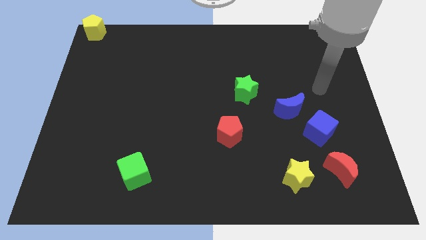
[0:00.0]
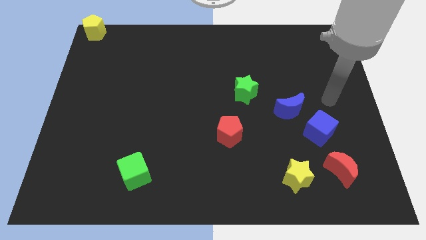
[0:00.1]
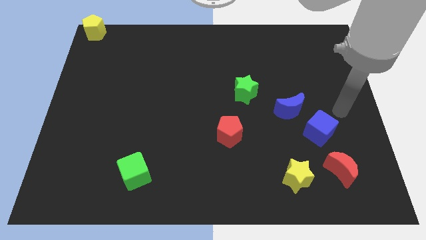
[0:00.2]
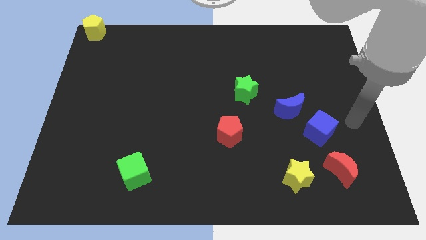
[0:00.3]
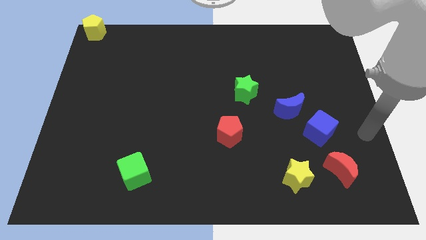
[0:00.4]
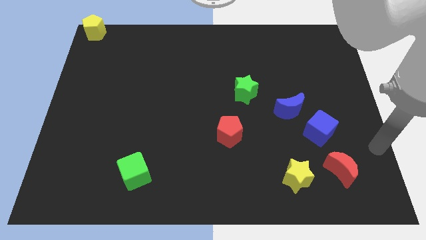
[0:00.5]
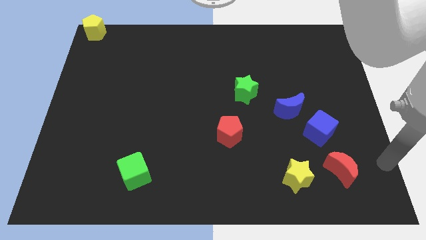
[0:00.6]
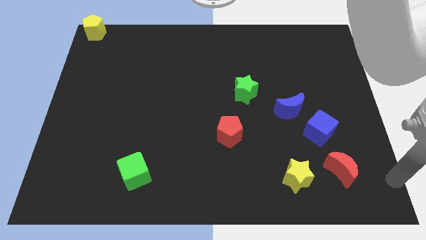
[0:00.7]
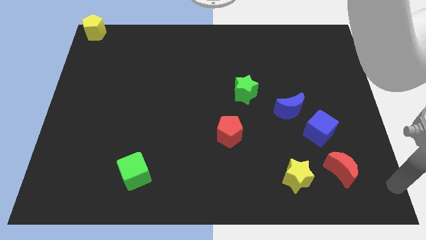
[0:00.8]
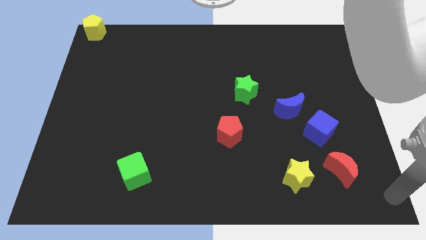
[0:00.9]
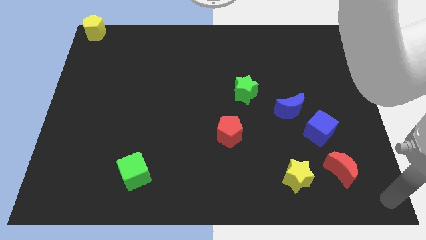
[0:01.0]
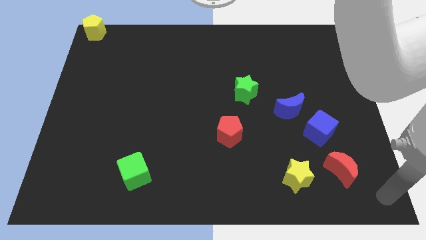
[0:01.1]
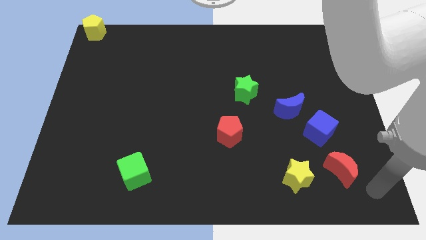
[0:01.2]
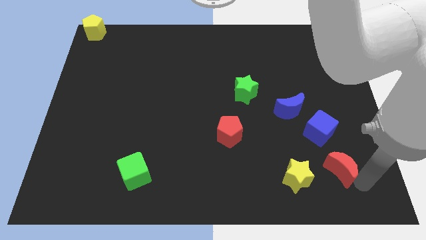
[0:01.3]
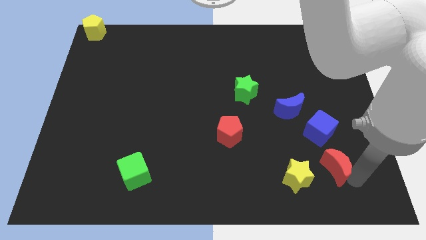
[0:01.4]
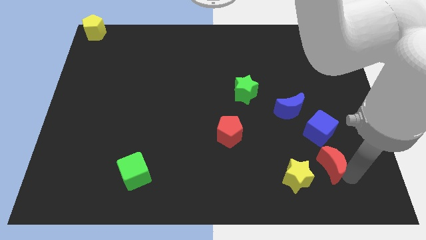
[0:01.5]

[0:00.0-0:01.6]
move your arm towards the bottom of the red crescent

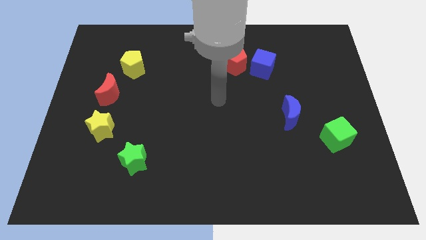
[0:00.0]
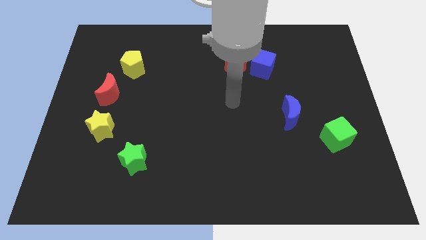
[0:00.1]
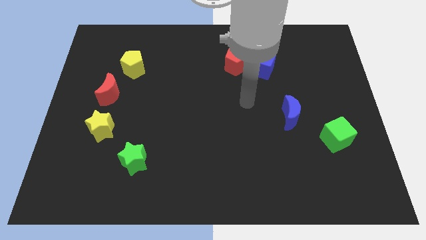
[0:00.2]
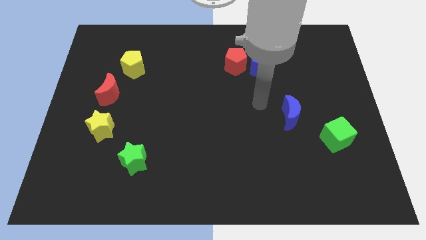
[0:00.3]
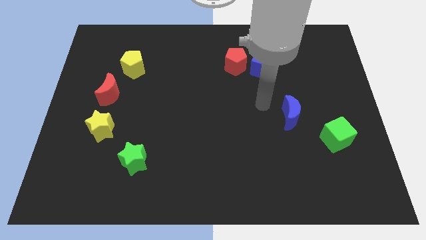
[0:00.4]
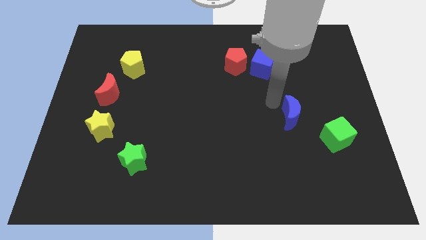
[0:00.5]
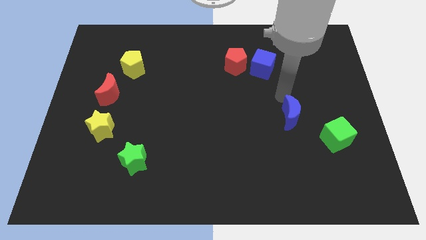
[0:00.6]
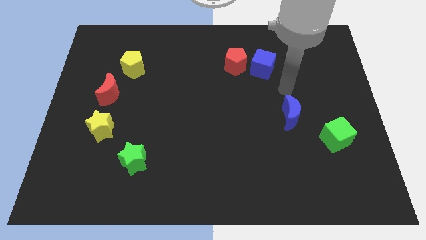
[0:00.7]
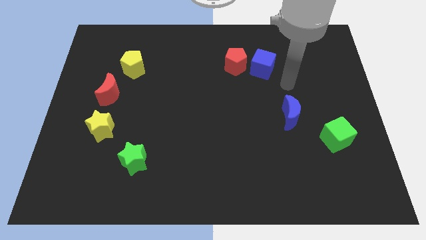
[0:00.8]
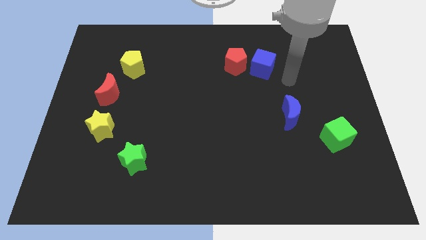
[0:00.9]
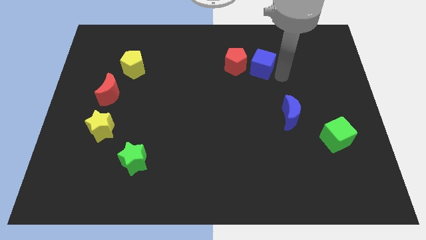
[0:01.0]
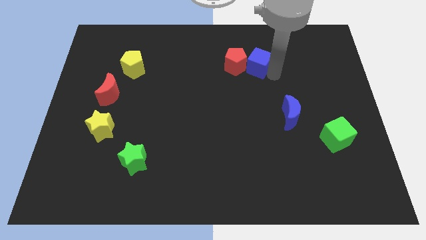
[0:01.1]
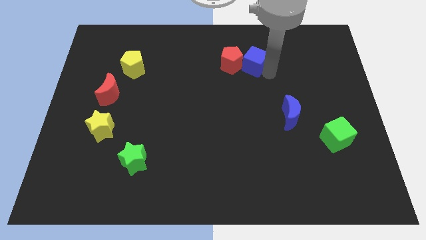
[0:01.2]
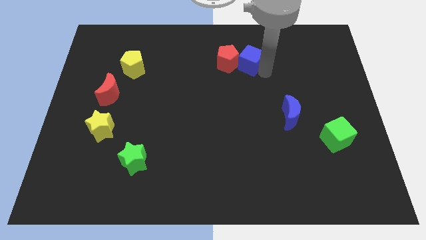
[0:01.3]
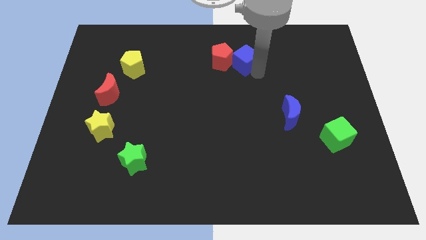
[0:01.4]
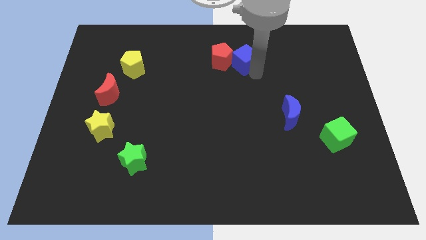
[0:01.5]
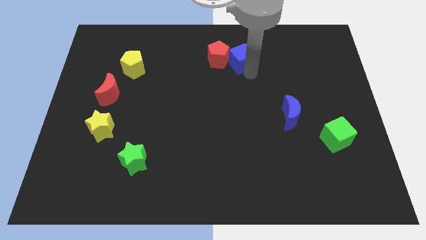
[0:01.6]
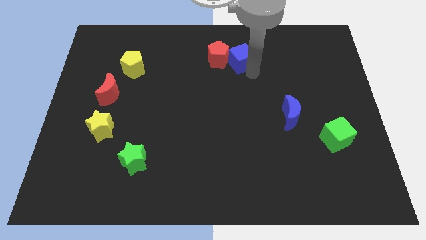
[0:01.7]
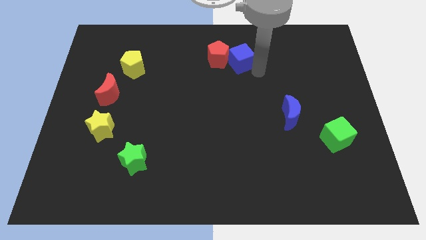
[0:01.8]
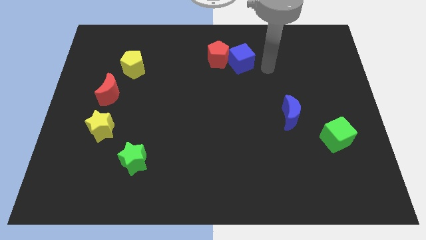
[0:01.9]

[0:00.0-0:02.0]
slightly push the blue cube along with red pentagon

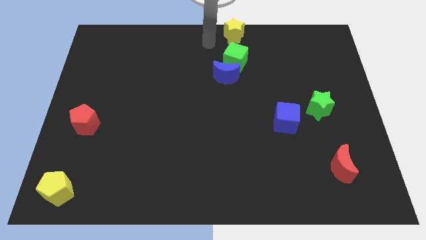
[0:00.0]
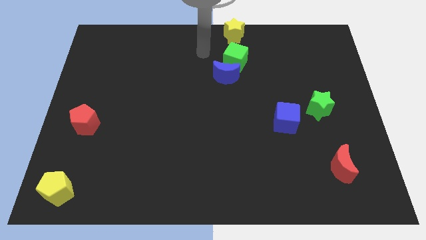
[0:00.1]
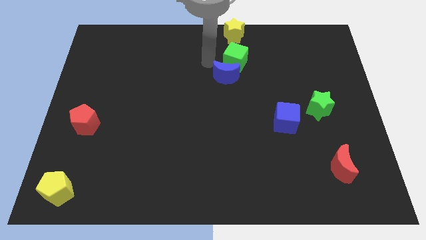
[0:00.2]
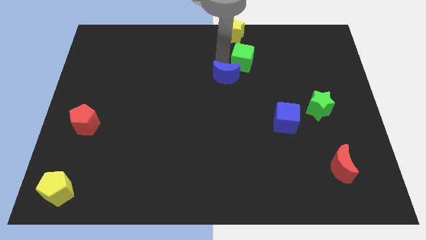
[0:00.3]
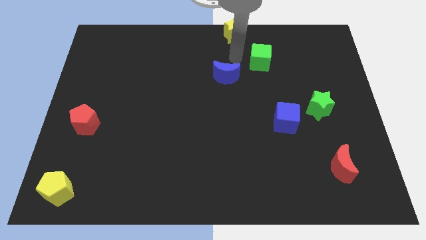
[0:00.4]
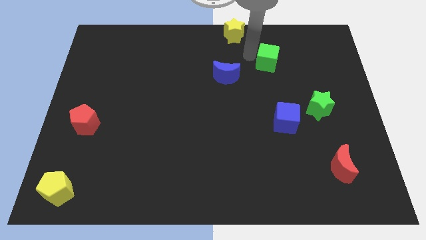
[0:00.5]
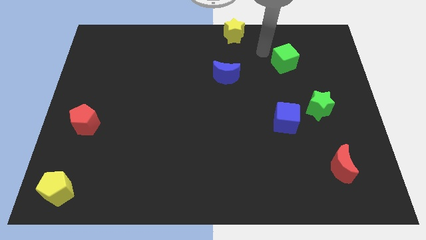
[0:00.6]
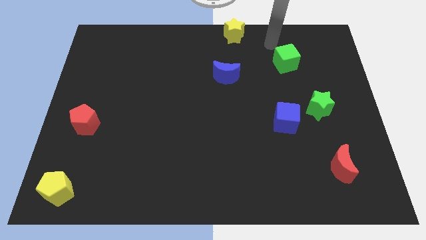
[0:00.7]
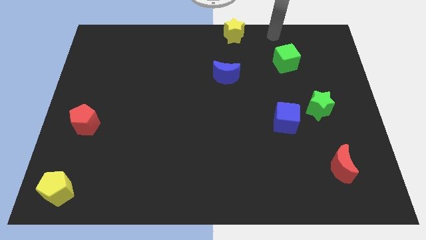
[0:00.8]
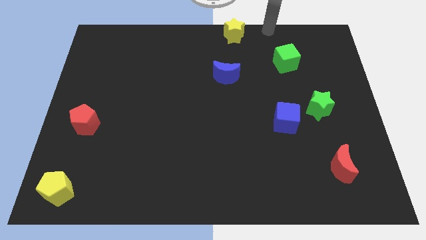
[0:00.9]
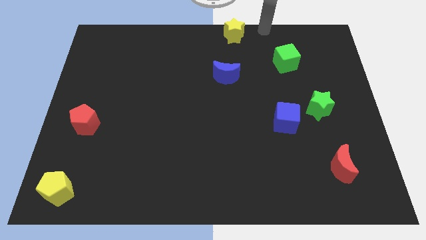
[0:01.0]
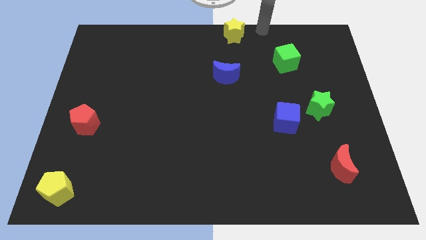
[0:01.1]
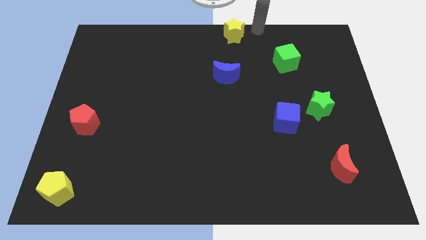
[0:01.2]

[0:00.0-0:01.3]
separate green cube from the blue moon

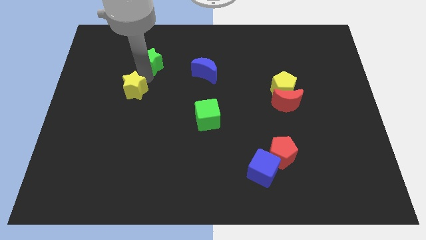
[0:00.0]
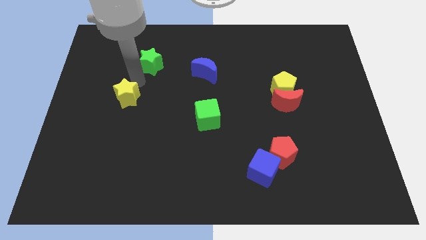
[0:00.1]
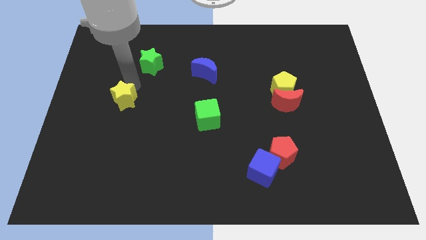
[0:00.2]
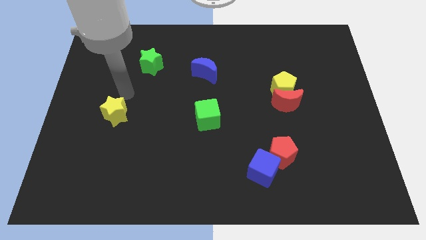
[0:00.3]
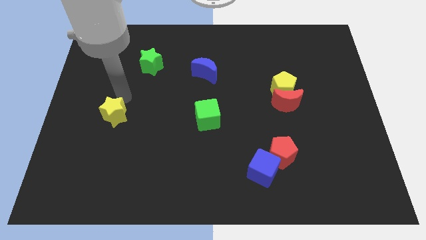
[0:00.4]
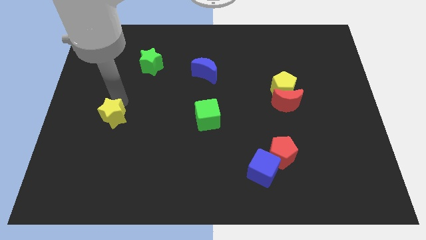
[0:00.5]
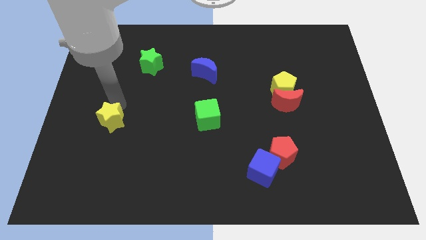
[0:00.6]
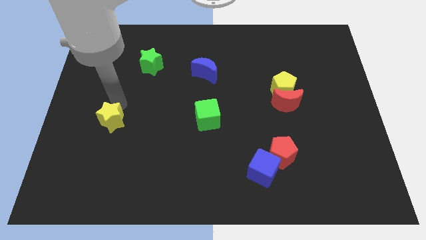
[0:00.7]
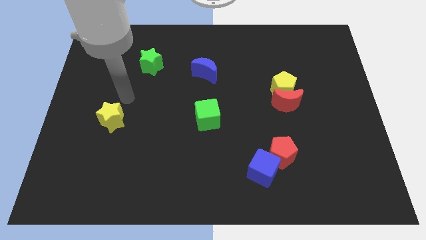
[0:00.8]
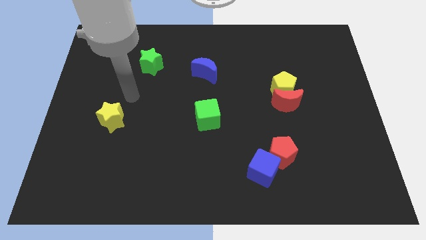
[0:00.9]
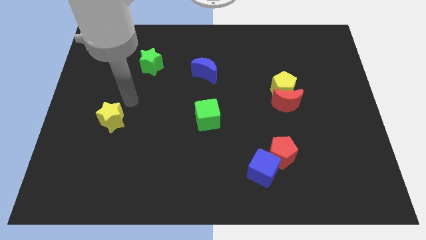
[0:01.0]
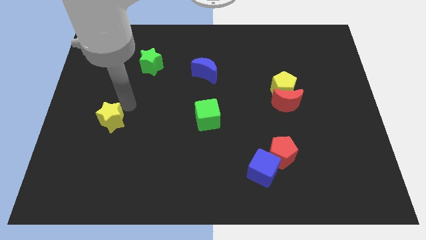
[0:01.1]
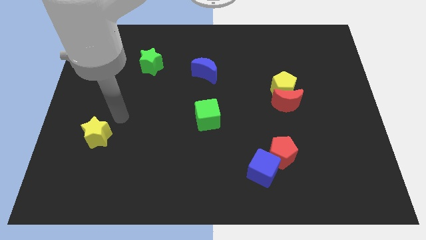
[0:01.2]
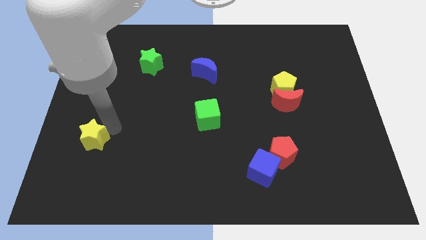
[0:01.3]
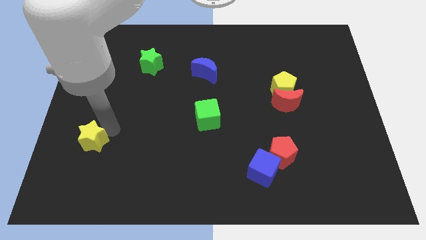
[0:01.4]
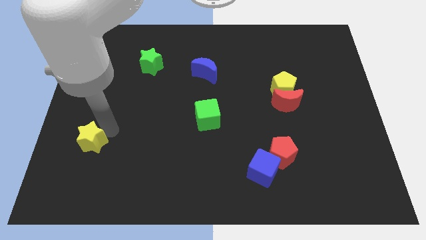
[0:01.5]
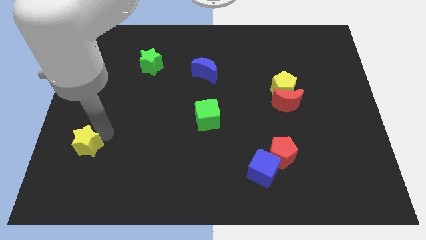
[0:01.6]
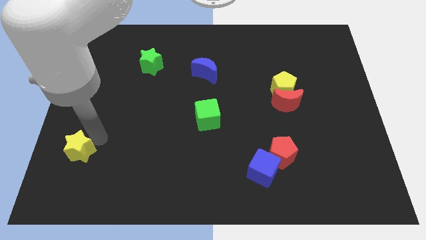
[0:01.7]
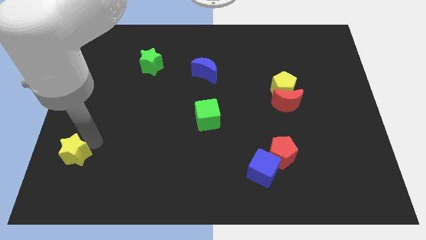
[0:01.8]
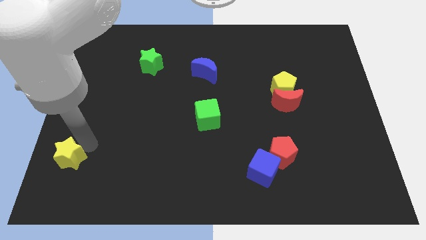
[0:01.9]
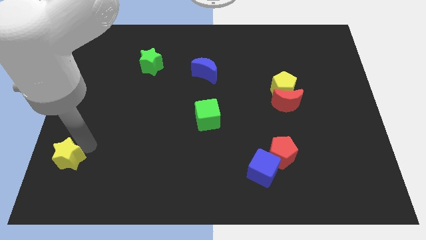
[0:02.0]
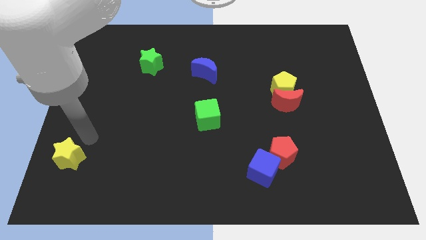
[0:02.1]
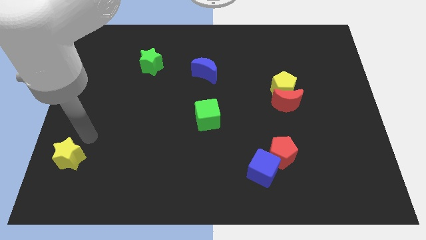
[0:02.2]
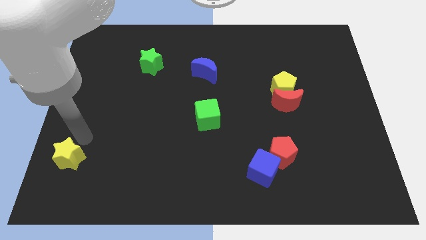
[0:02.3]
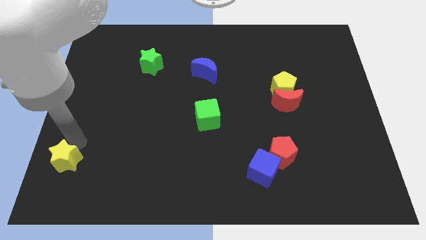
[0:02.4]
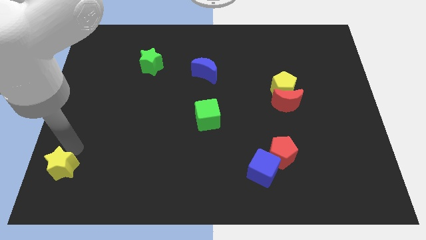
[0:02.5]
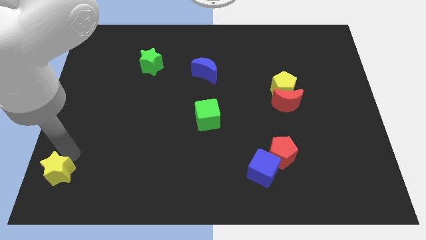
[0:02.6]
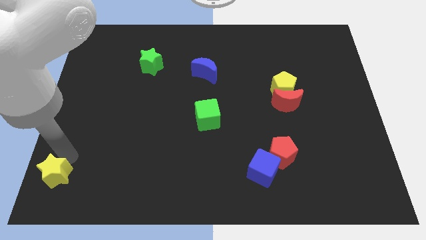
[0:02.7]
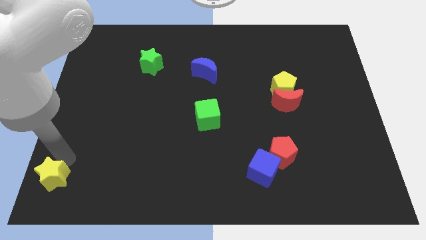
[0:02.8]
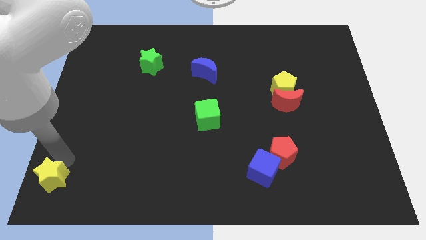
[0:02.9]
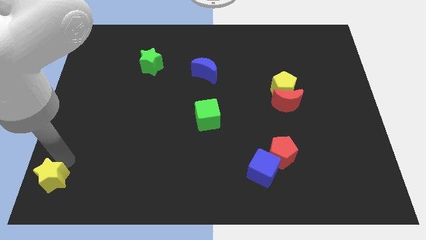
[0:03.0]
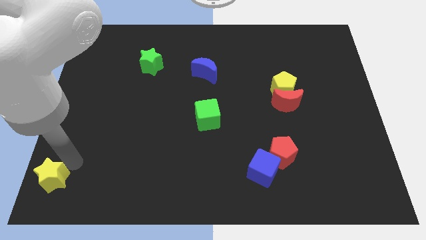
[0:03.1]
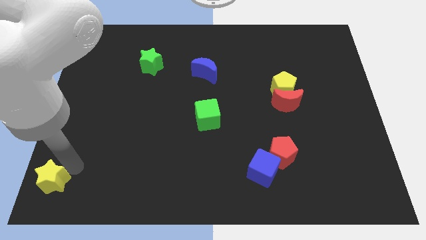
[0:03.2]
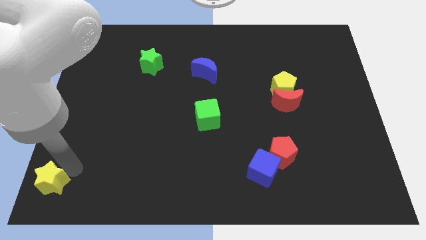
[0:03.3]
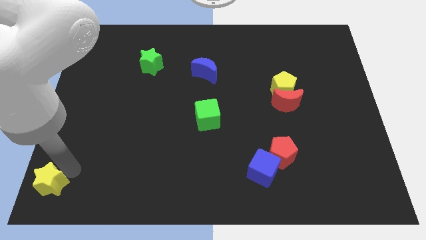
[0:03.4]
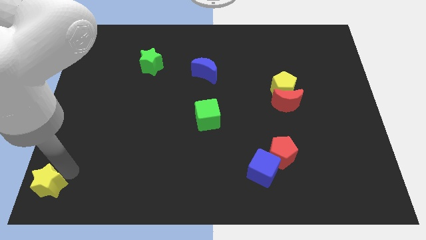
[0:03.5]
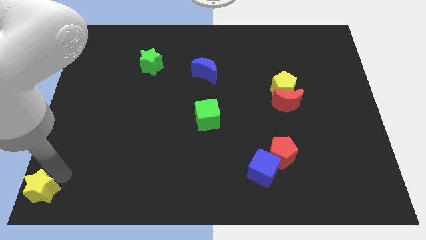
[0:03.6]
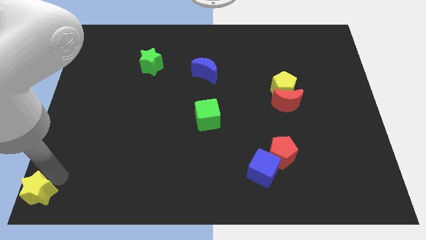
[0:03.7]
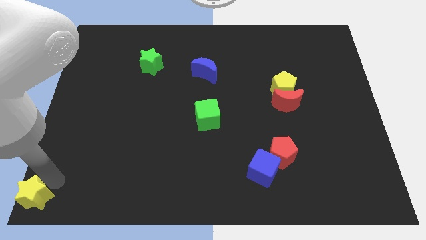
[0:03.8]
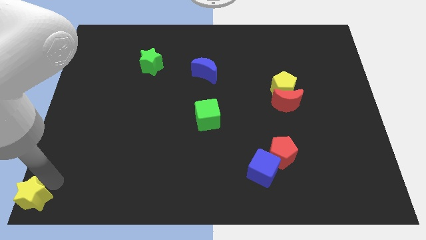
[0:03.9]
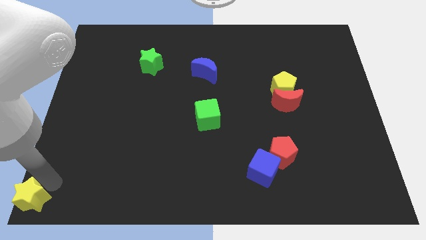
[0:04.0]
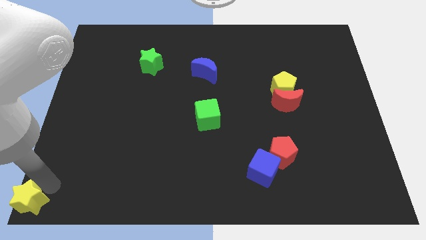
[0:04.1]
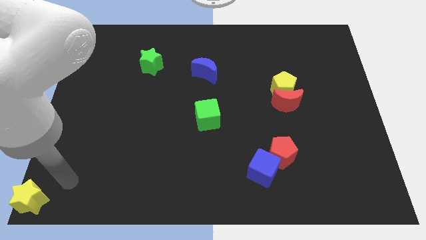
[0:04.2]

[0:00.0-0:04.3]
move the yellow star to the bottom left corner of the board
